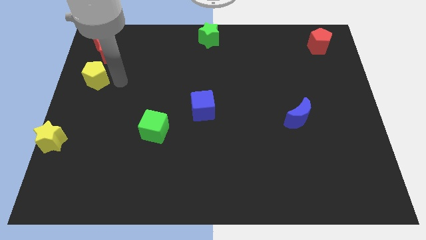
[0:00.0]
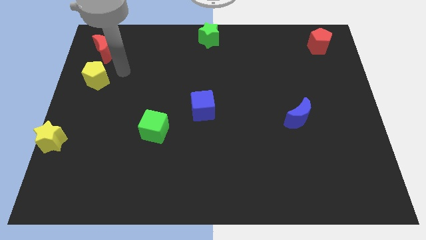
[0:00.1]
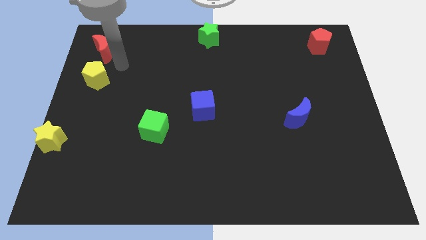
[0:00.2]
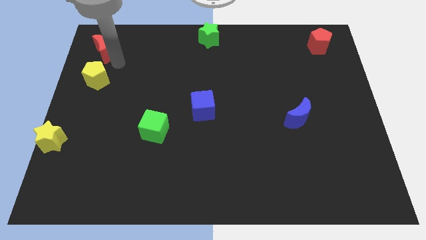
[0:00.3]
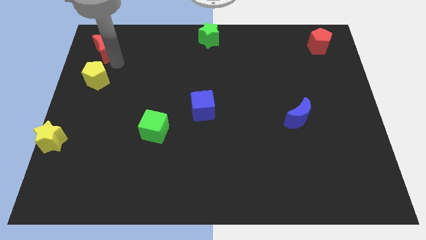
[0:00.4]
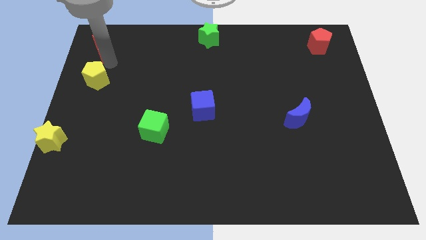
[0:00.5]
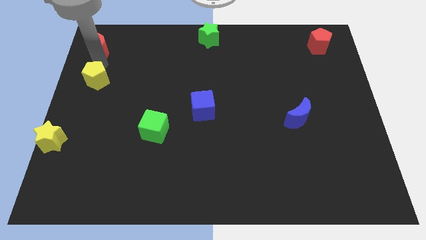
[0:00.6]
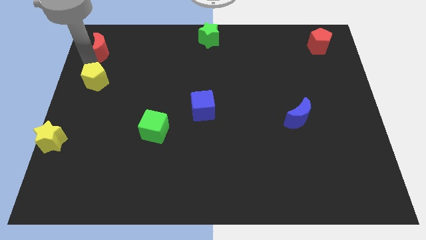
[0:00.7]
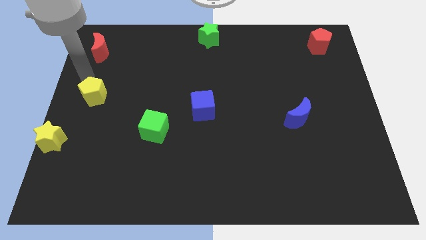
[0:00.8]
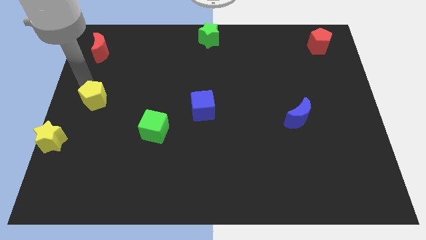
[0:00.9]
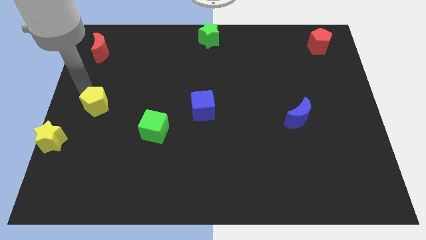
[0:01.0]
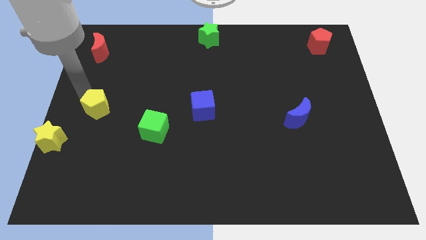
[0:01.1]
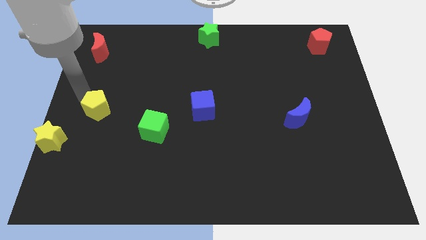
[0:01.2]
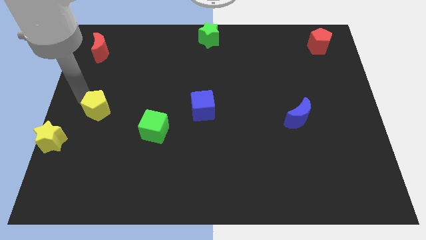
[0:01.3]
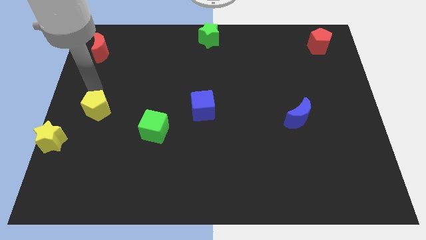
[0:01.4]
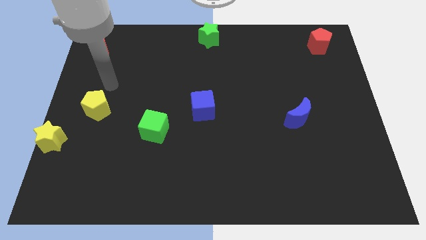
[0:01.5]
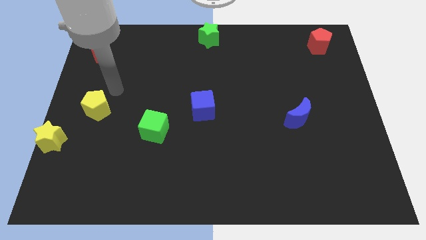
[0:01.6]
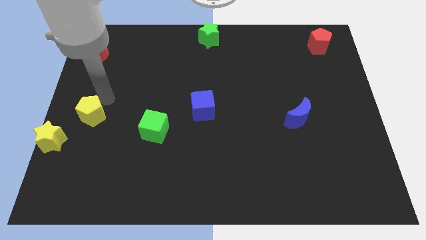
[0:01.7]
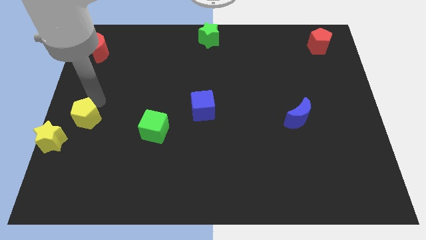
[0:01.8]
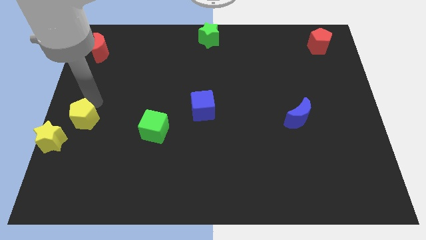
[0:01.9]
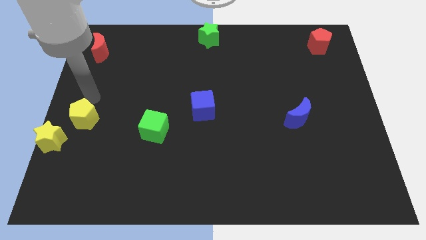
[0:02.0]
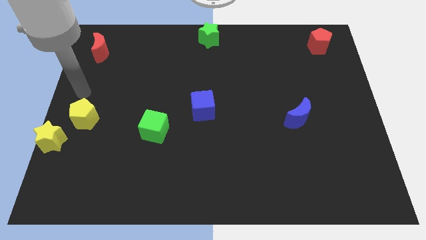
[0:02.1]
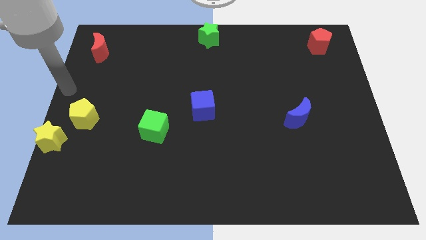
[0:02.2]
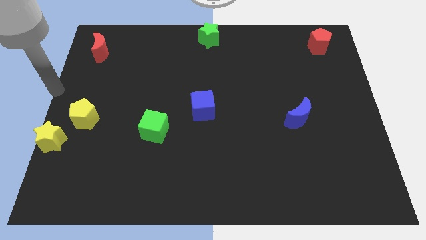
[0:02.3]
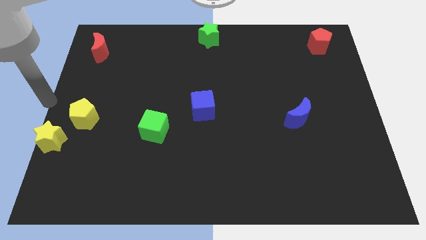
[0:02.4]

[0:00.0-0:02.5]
move yellow pentagon towards yellow star

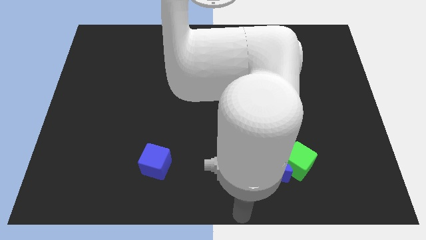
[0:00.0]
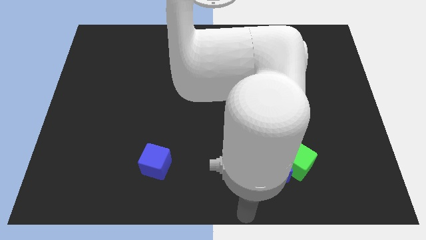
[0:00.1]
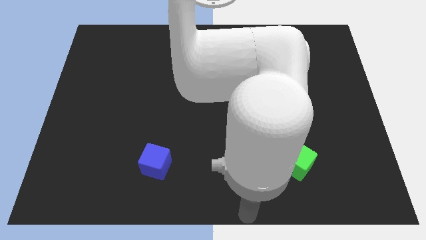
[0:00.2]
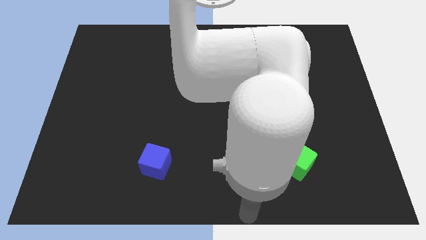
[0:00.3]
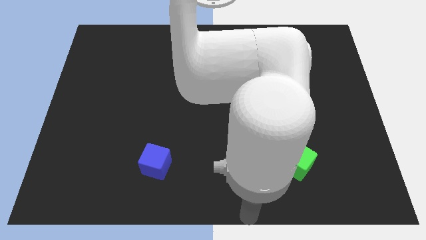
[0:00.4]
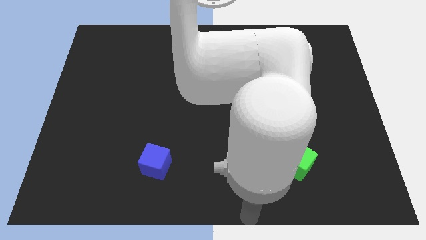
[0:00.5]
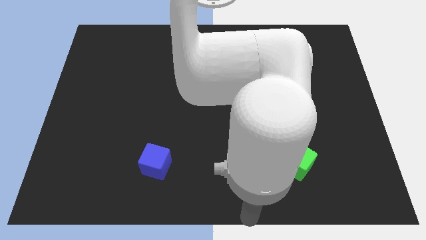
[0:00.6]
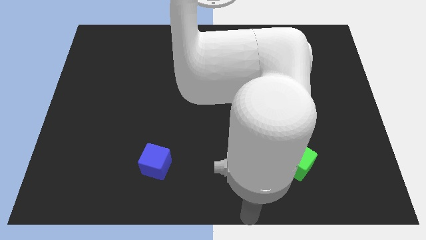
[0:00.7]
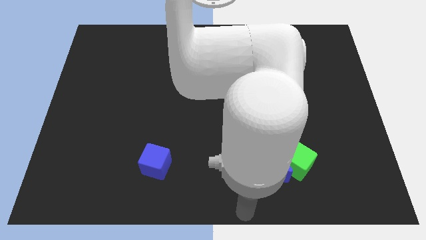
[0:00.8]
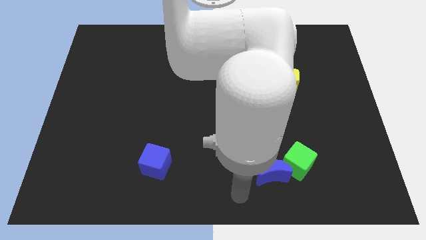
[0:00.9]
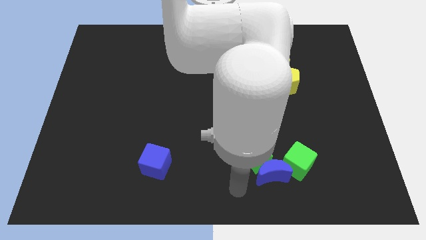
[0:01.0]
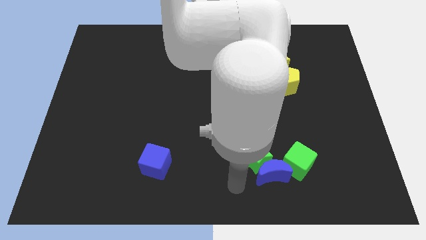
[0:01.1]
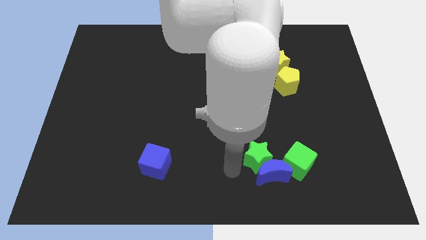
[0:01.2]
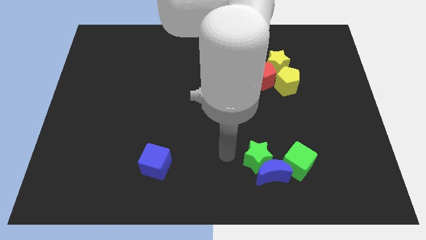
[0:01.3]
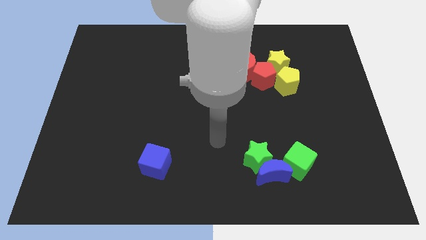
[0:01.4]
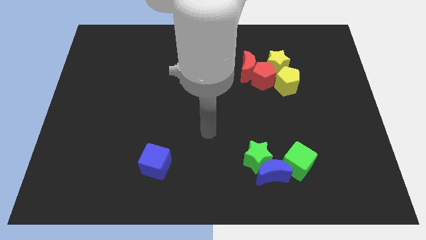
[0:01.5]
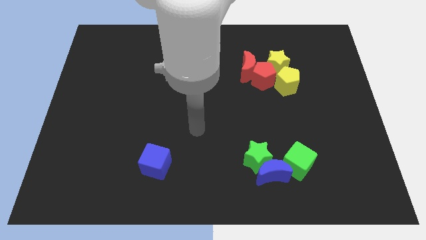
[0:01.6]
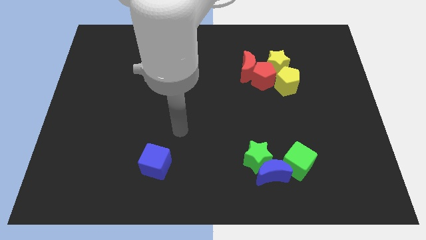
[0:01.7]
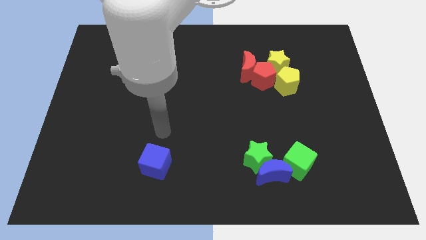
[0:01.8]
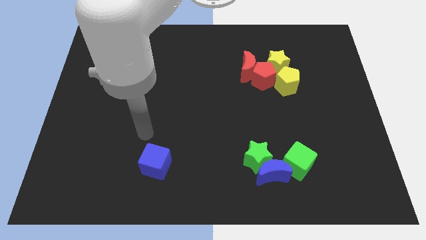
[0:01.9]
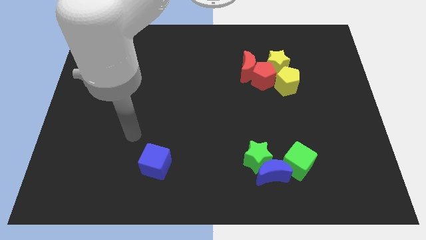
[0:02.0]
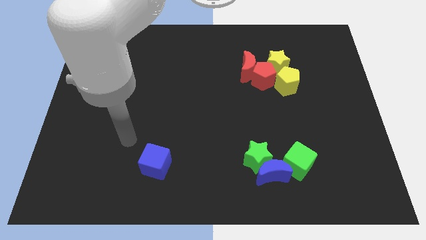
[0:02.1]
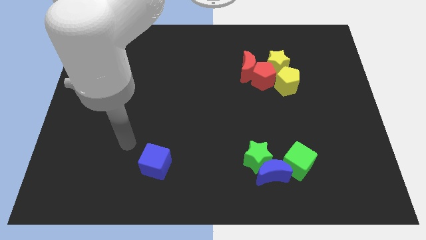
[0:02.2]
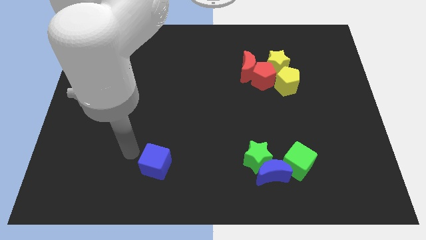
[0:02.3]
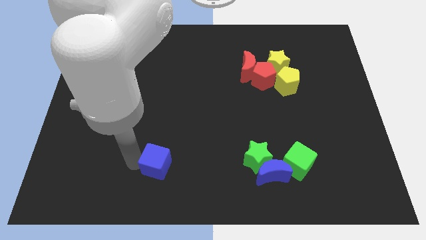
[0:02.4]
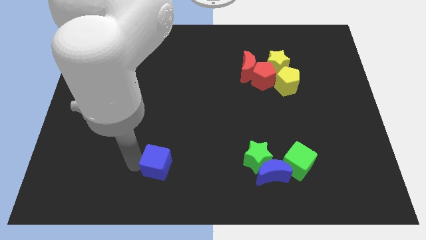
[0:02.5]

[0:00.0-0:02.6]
place the arm left to the blue cube

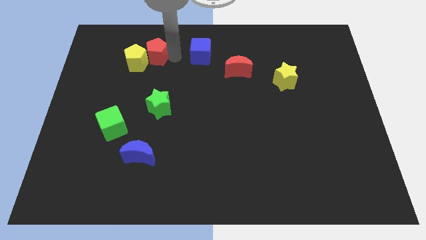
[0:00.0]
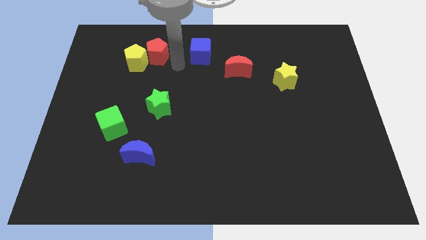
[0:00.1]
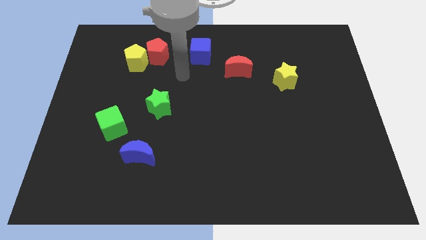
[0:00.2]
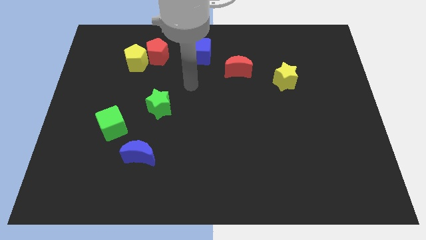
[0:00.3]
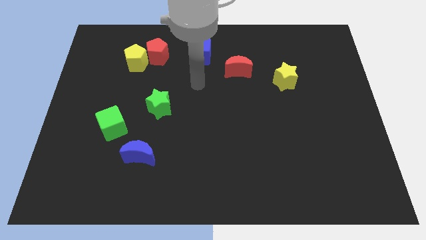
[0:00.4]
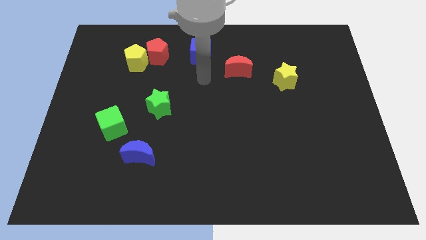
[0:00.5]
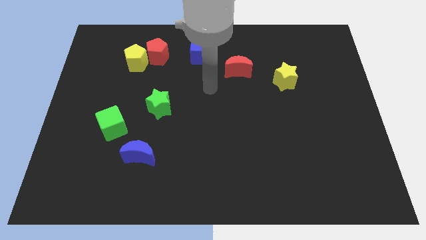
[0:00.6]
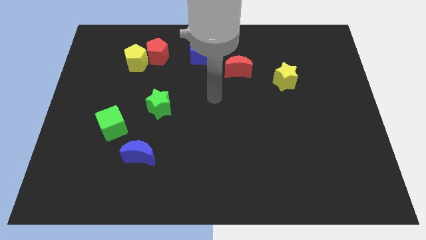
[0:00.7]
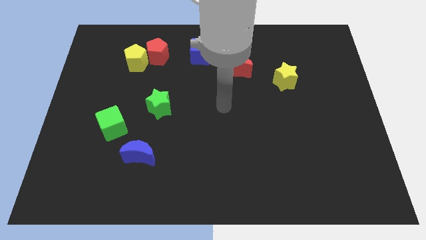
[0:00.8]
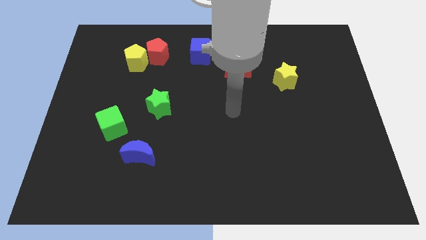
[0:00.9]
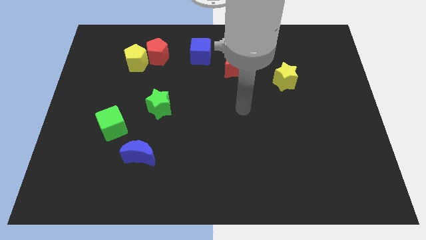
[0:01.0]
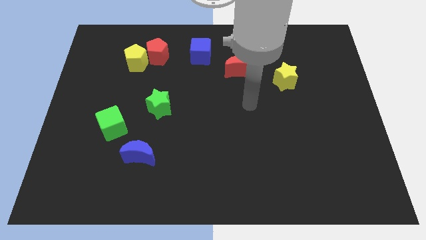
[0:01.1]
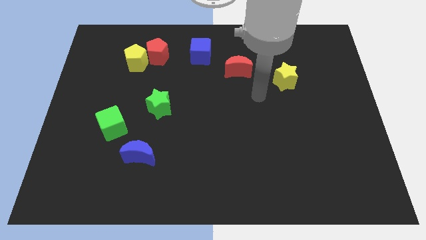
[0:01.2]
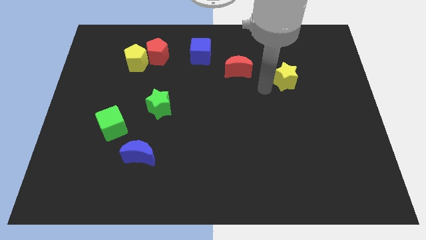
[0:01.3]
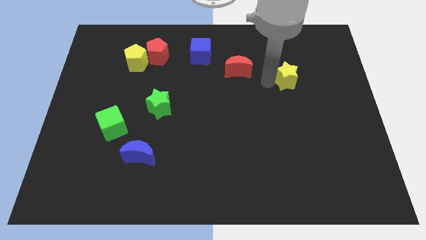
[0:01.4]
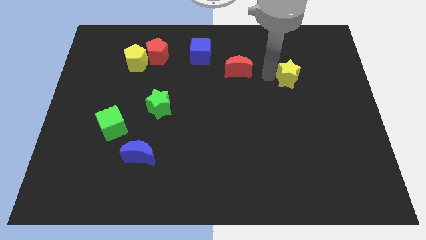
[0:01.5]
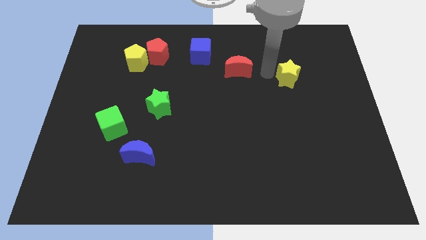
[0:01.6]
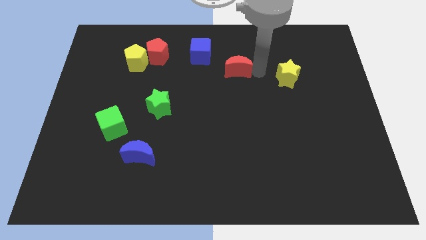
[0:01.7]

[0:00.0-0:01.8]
touch the left of the yellow star

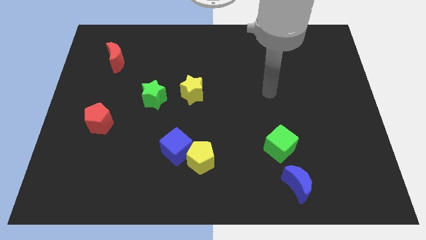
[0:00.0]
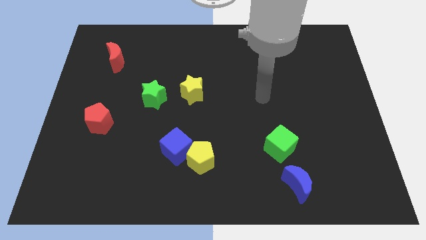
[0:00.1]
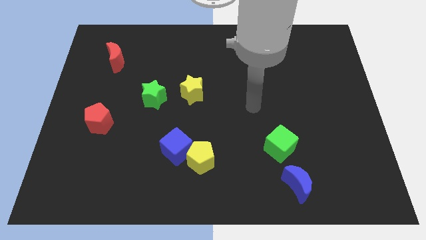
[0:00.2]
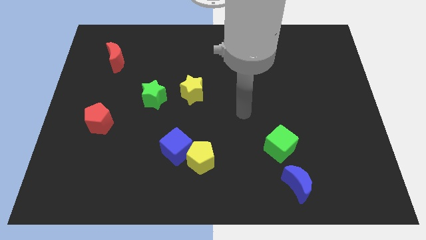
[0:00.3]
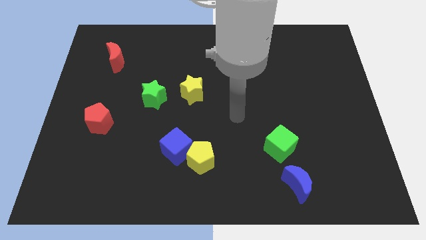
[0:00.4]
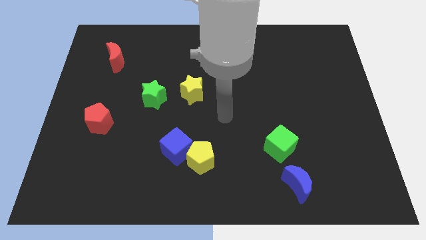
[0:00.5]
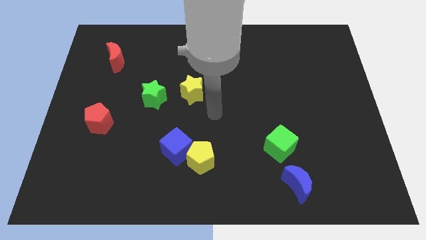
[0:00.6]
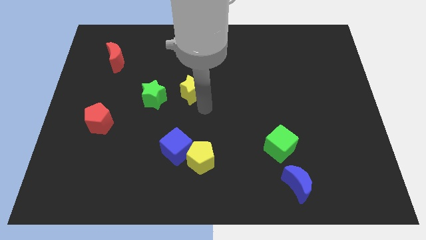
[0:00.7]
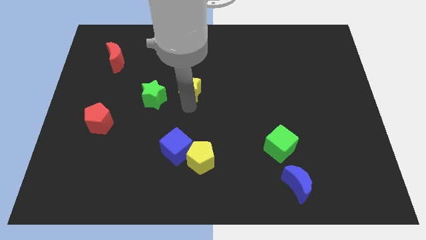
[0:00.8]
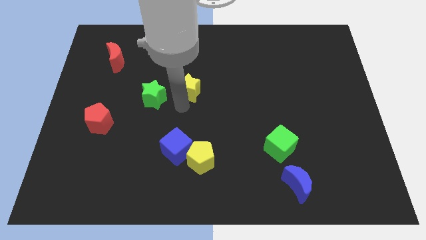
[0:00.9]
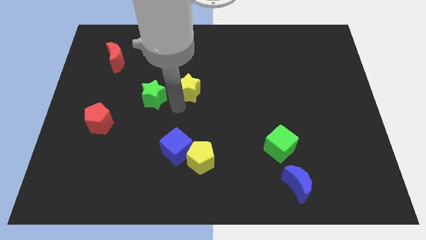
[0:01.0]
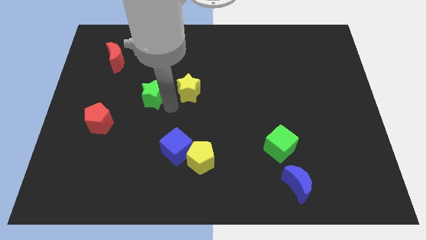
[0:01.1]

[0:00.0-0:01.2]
move your hand towards the green star

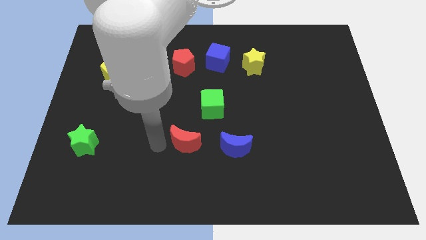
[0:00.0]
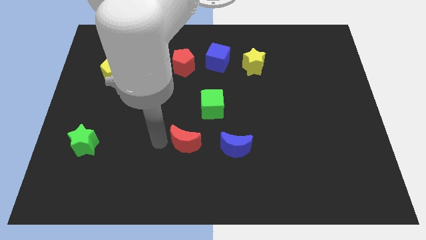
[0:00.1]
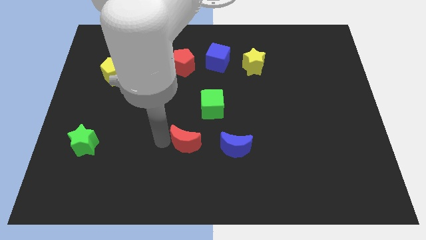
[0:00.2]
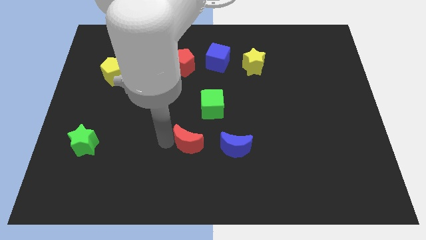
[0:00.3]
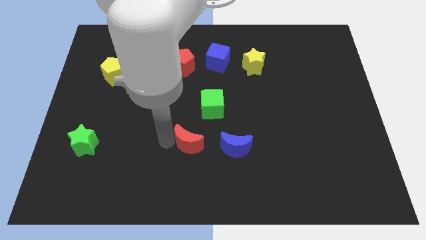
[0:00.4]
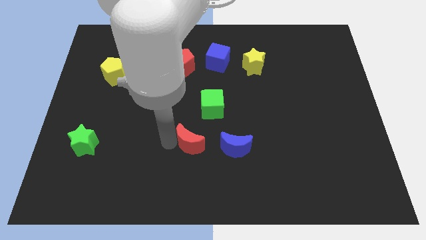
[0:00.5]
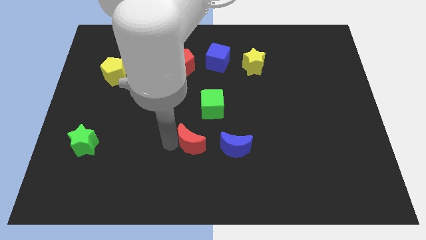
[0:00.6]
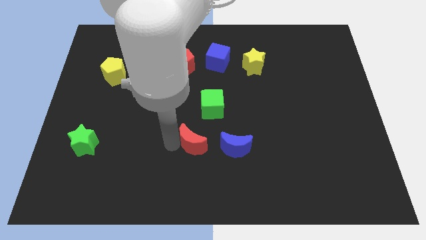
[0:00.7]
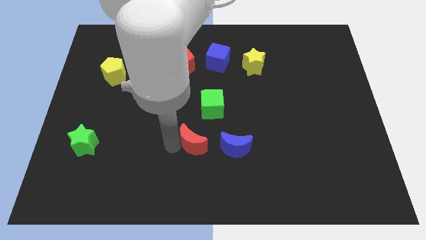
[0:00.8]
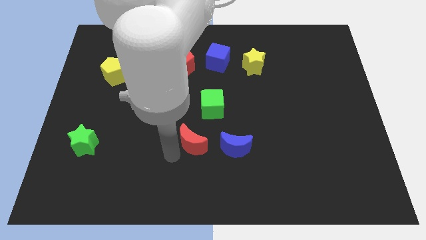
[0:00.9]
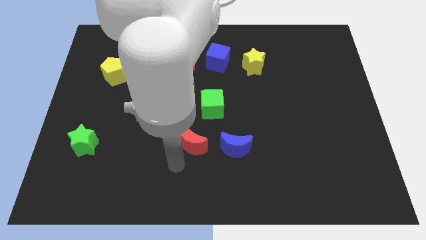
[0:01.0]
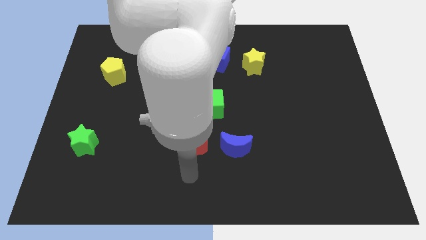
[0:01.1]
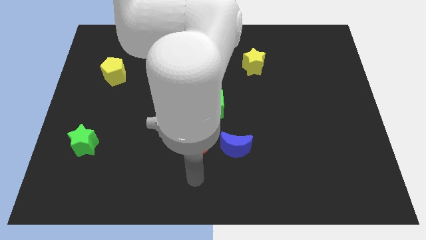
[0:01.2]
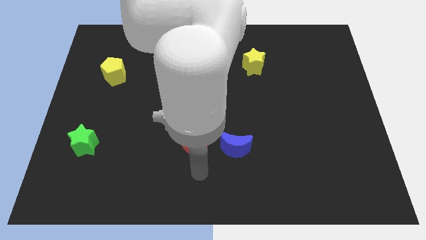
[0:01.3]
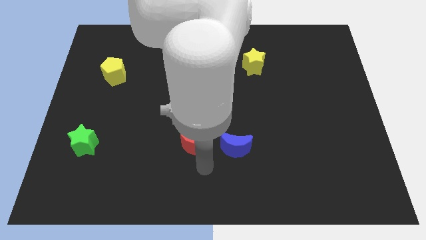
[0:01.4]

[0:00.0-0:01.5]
move red moon towards blue moon
